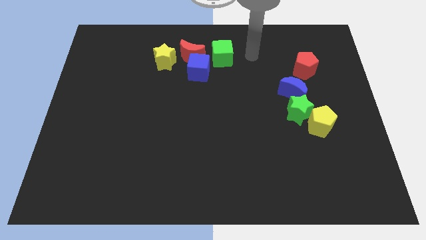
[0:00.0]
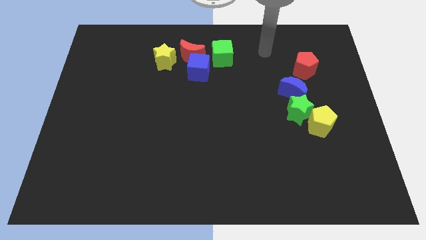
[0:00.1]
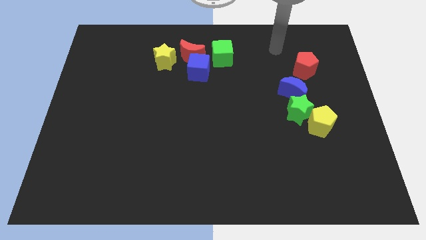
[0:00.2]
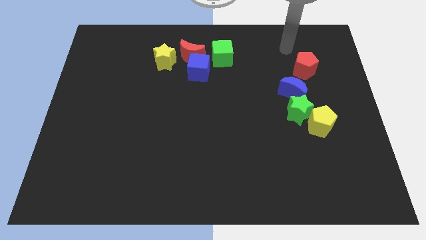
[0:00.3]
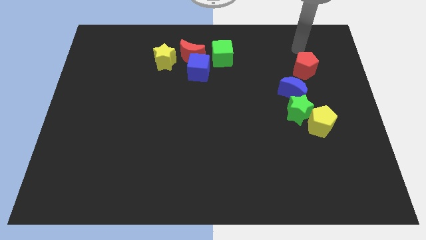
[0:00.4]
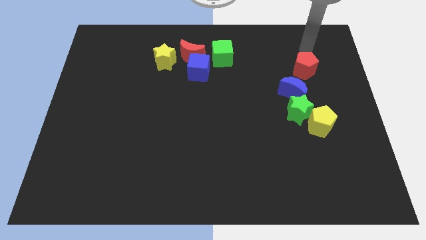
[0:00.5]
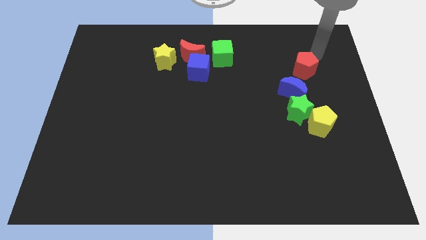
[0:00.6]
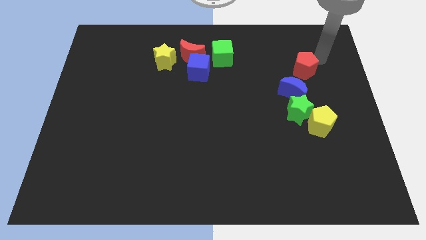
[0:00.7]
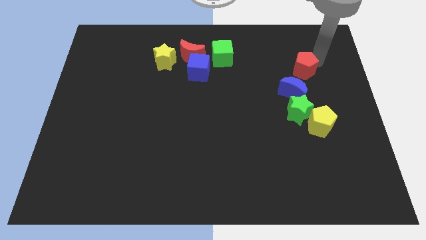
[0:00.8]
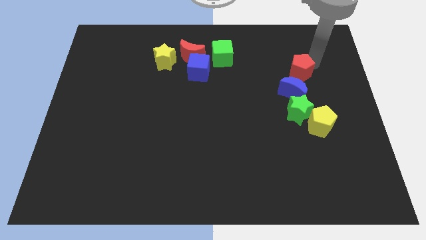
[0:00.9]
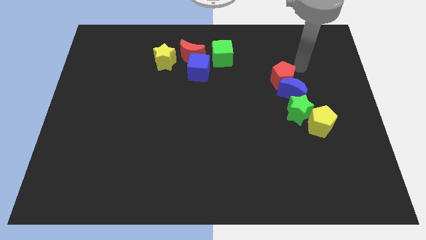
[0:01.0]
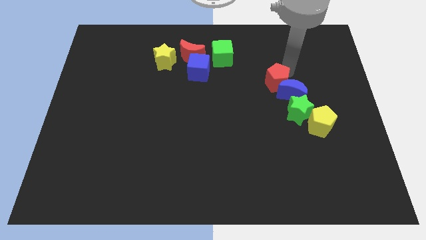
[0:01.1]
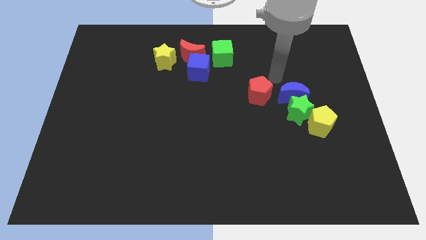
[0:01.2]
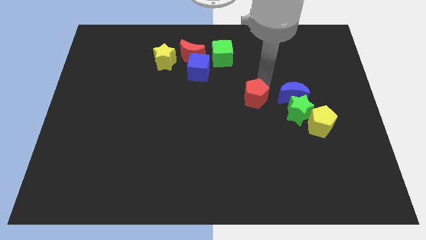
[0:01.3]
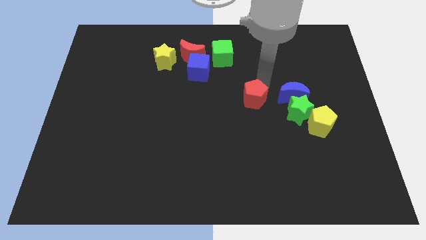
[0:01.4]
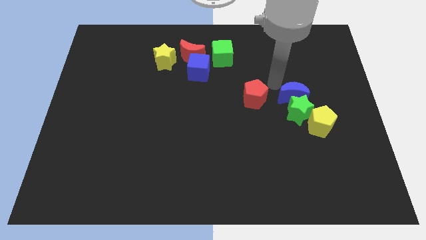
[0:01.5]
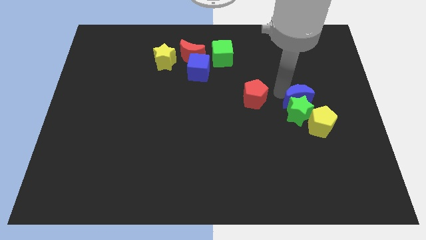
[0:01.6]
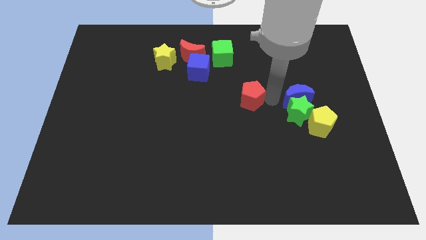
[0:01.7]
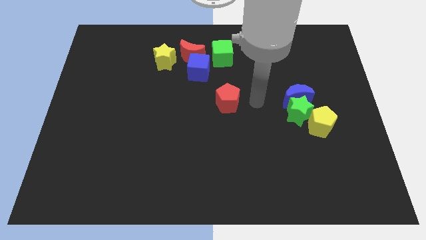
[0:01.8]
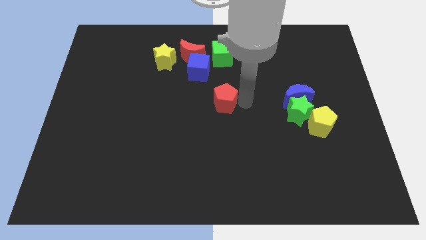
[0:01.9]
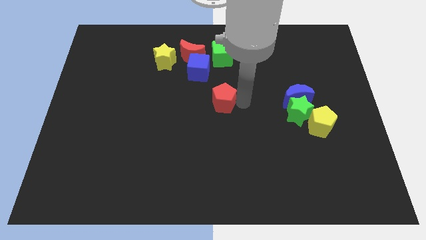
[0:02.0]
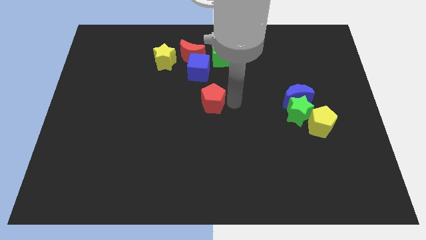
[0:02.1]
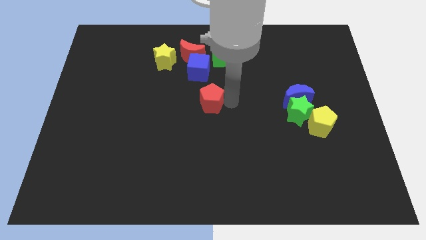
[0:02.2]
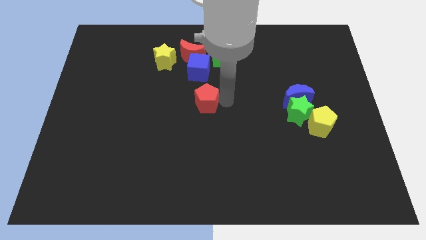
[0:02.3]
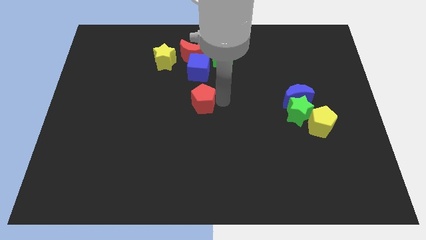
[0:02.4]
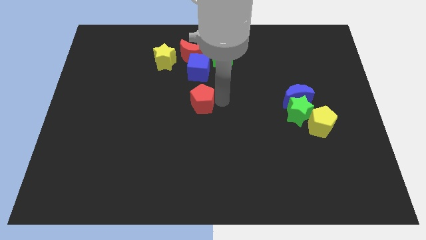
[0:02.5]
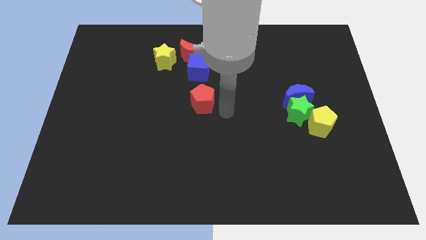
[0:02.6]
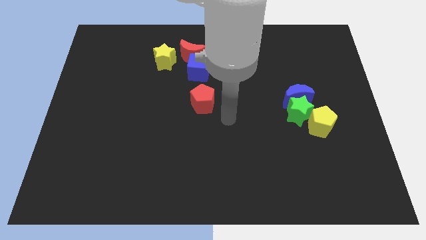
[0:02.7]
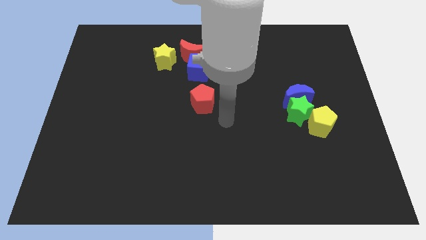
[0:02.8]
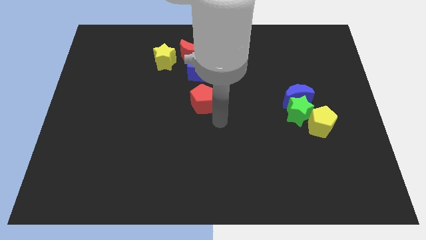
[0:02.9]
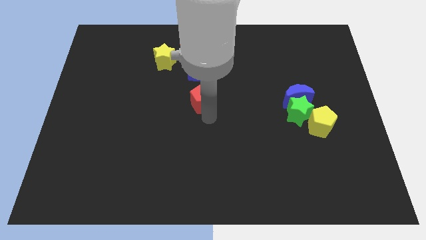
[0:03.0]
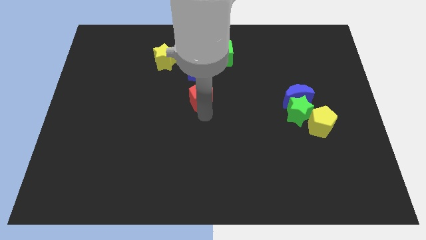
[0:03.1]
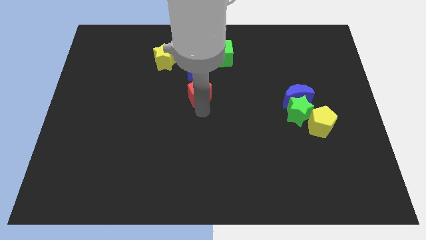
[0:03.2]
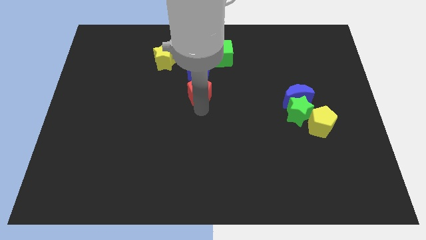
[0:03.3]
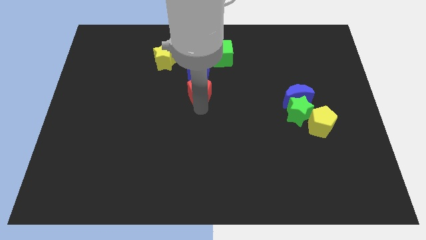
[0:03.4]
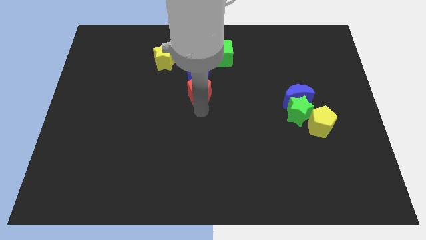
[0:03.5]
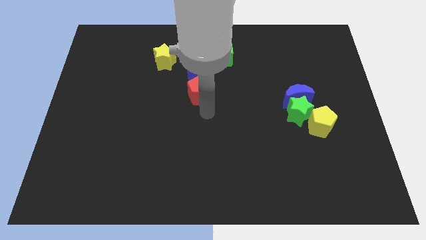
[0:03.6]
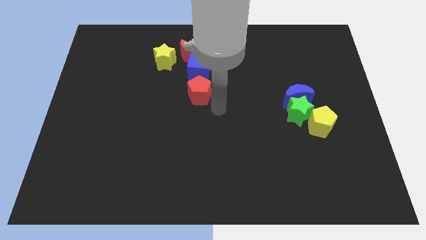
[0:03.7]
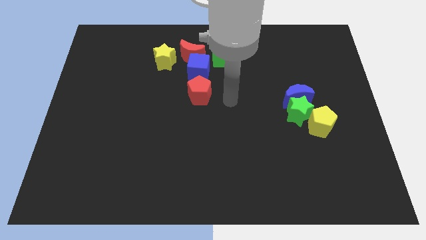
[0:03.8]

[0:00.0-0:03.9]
move the red pentagon to the bottom side of the blue cube

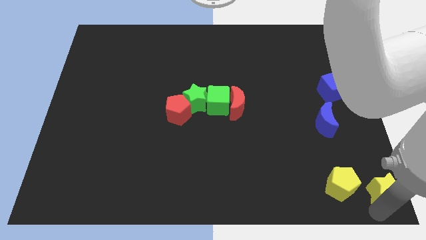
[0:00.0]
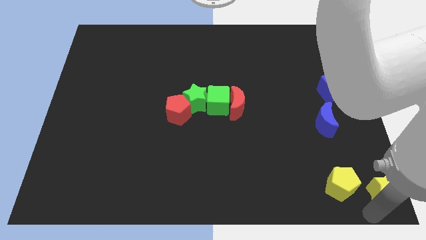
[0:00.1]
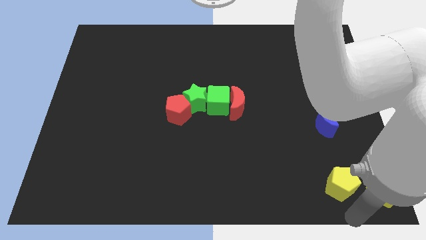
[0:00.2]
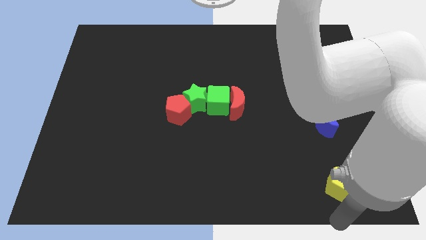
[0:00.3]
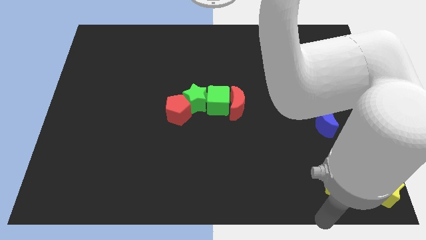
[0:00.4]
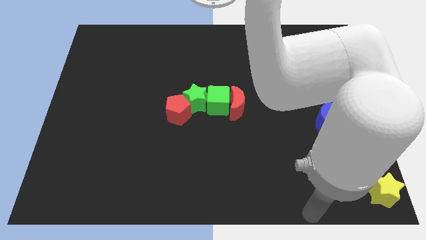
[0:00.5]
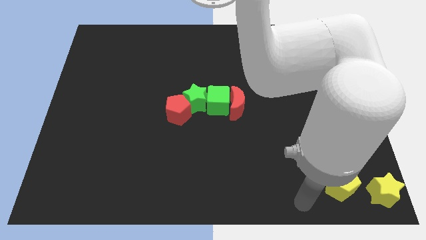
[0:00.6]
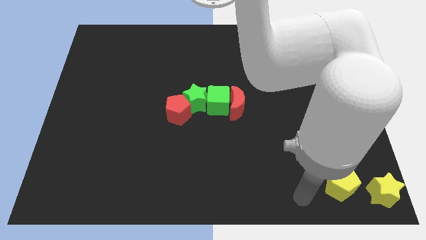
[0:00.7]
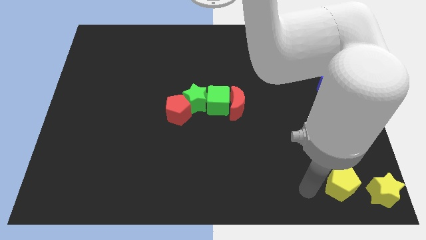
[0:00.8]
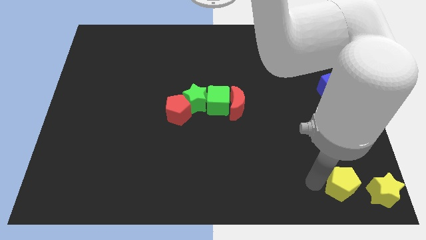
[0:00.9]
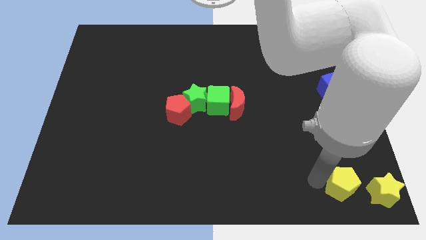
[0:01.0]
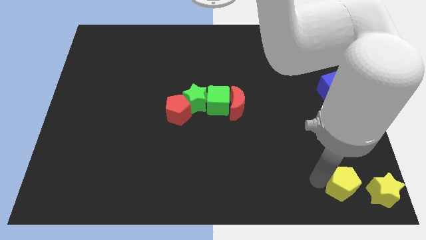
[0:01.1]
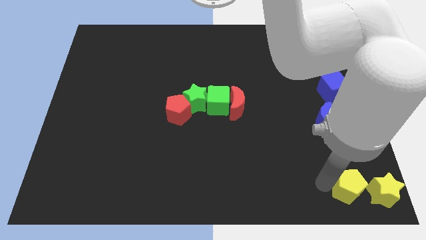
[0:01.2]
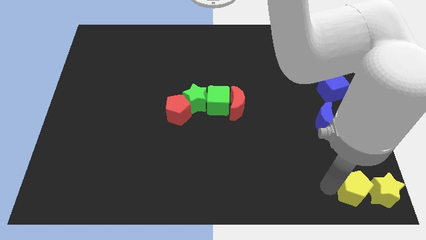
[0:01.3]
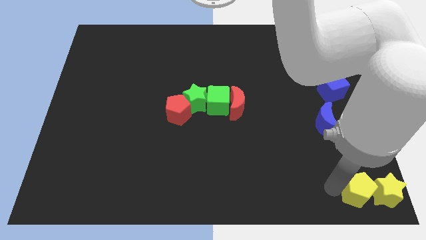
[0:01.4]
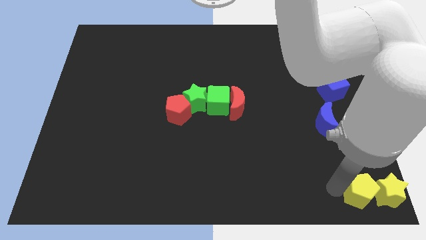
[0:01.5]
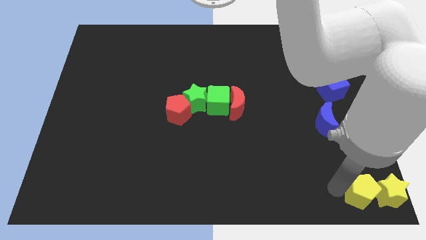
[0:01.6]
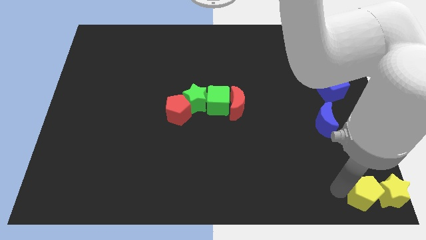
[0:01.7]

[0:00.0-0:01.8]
push the yellow pentagon into the yellow star

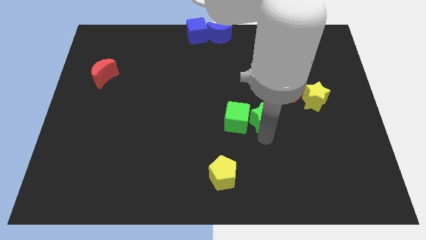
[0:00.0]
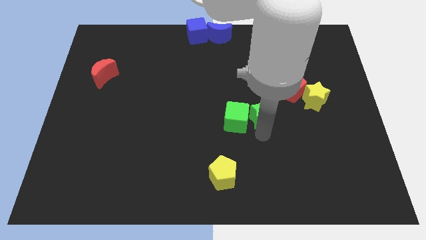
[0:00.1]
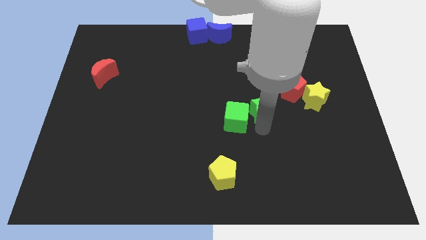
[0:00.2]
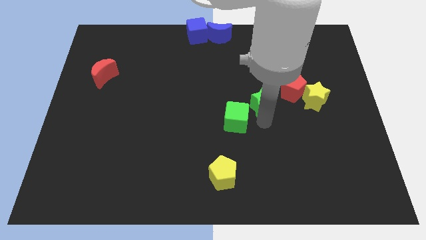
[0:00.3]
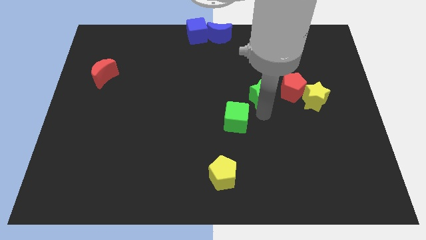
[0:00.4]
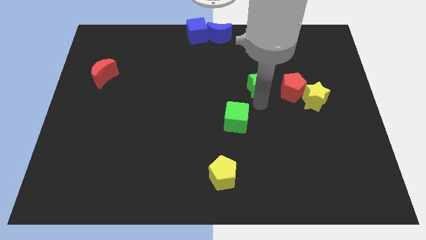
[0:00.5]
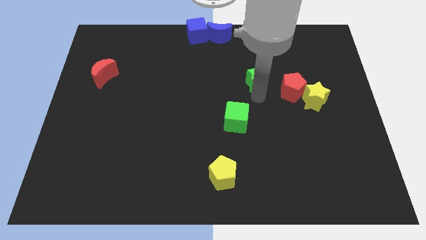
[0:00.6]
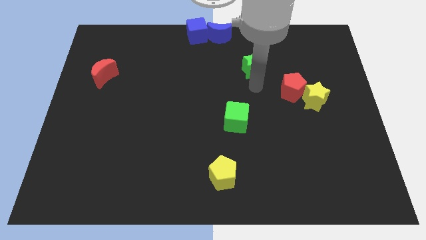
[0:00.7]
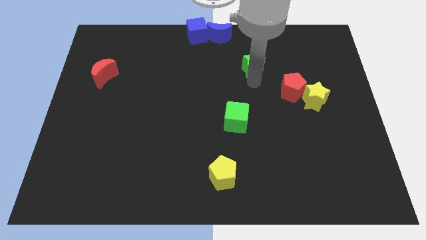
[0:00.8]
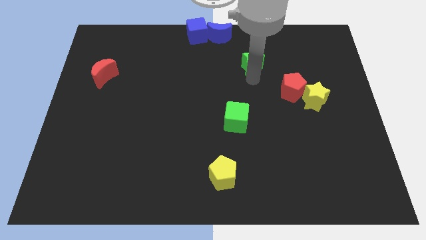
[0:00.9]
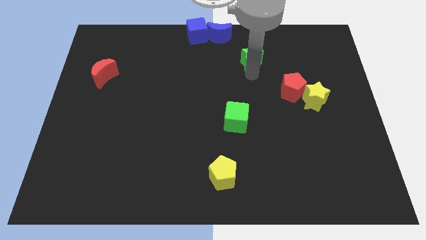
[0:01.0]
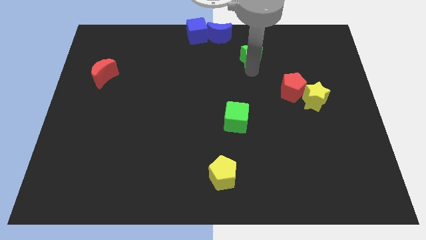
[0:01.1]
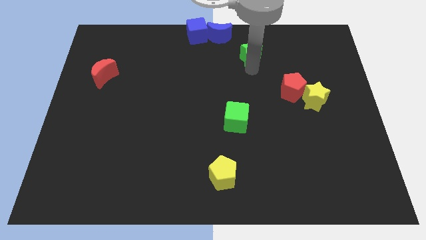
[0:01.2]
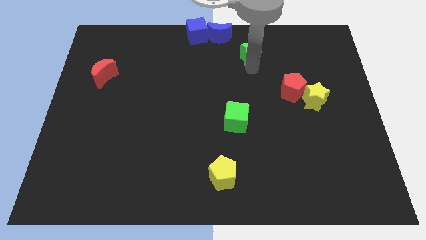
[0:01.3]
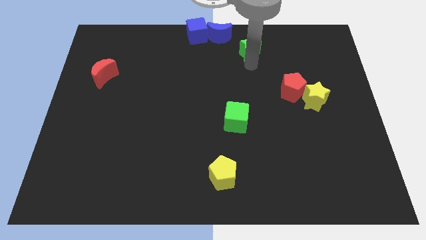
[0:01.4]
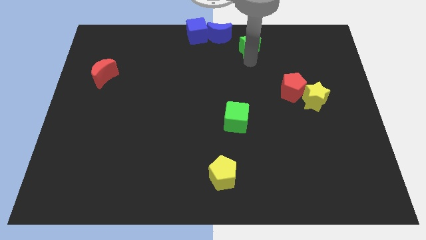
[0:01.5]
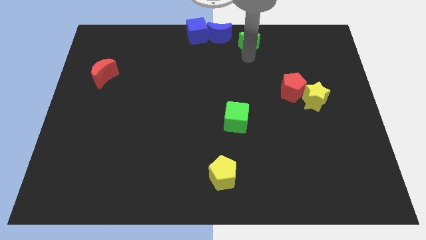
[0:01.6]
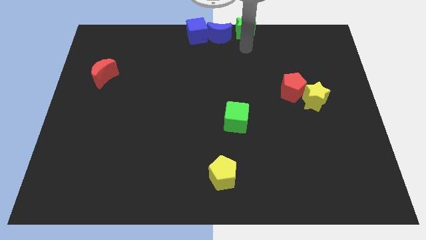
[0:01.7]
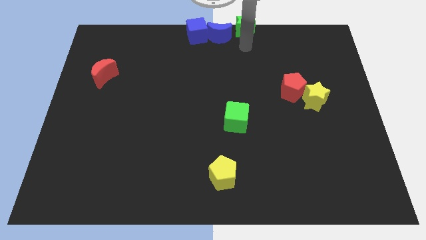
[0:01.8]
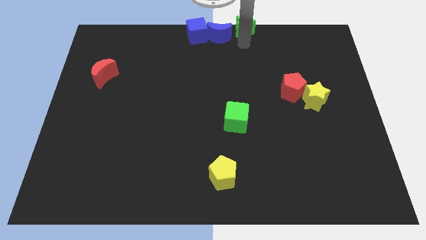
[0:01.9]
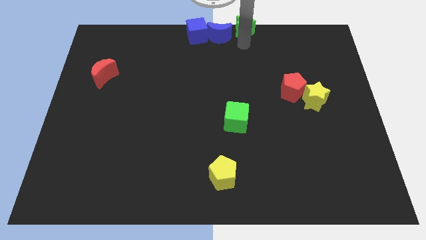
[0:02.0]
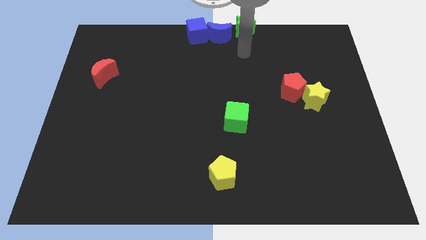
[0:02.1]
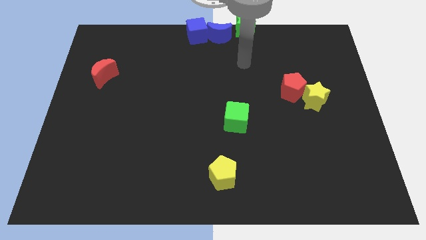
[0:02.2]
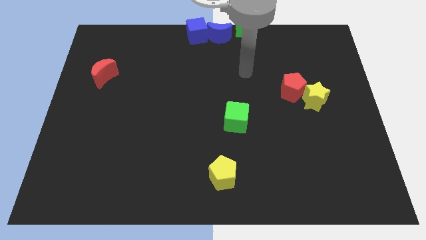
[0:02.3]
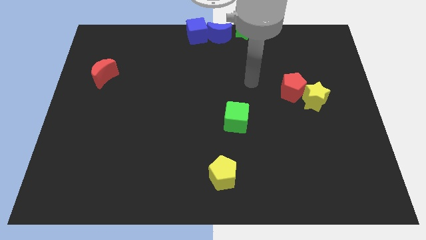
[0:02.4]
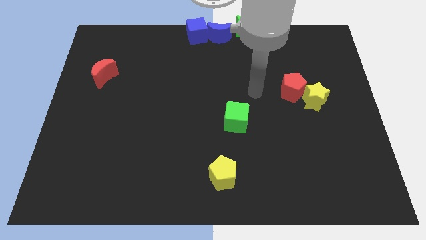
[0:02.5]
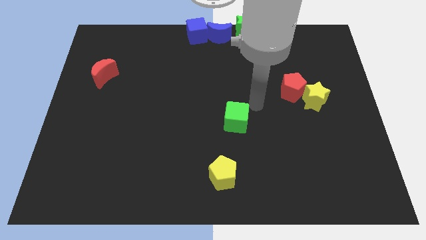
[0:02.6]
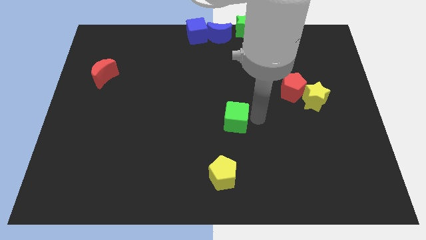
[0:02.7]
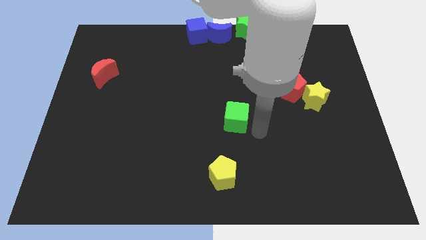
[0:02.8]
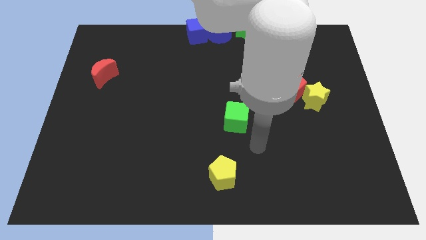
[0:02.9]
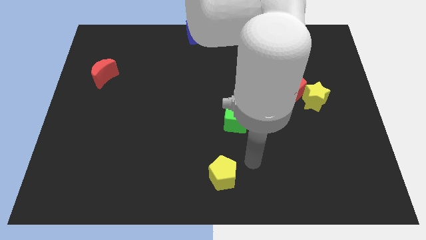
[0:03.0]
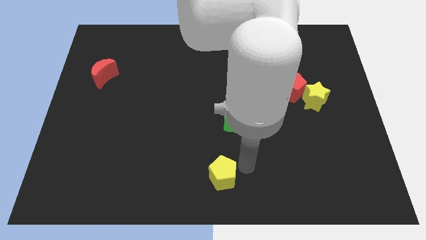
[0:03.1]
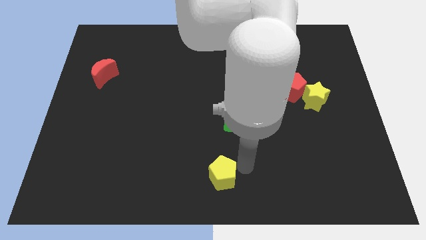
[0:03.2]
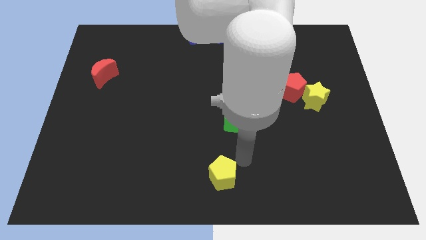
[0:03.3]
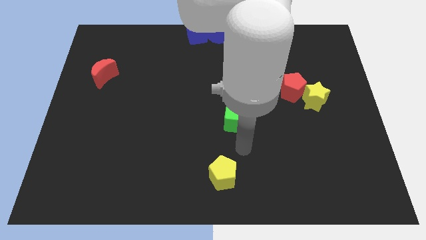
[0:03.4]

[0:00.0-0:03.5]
move the green star to the right side of the blue moon
